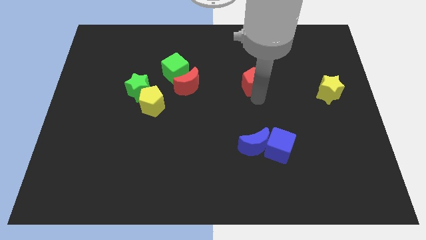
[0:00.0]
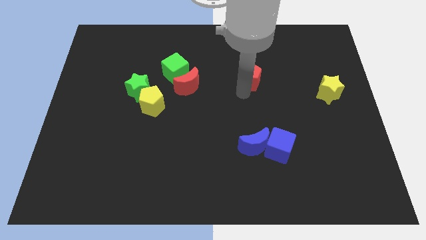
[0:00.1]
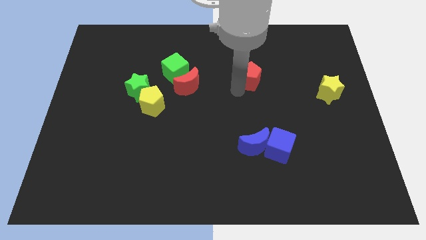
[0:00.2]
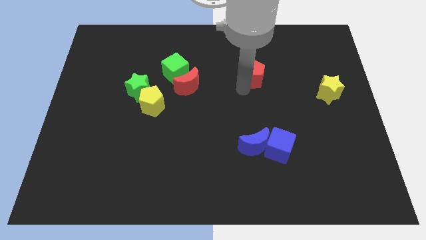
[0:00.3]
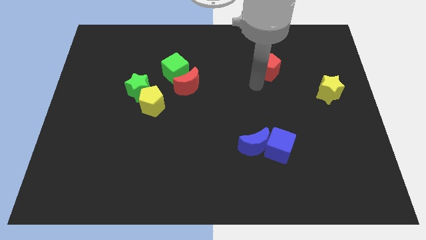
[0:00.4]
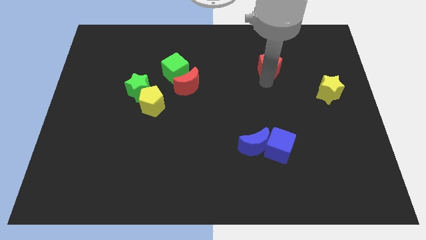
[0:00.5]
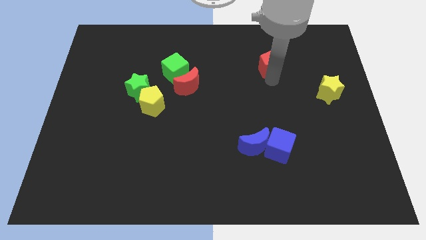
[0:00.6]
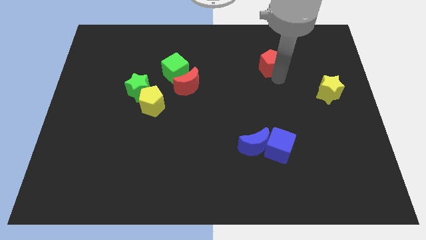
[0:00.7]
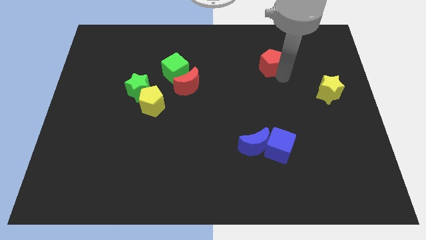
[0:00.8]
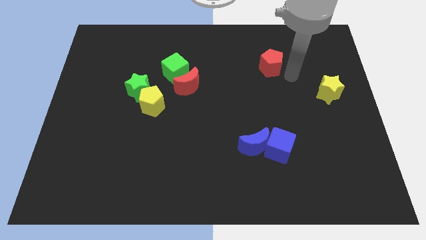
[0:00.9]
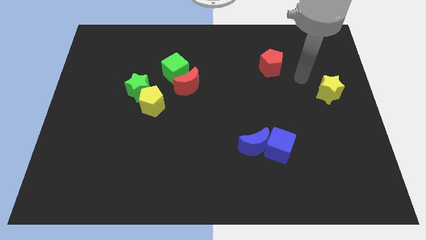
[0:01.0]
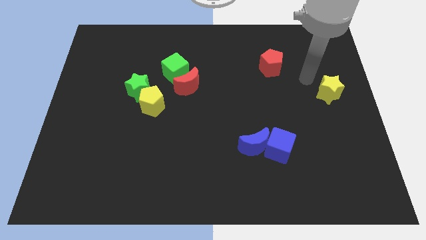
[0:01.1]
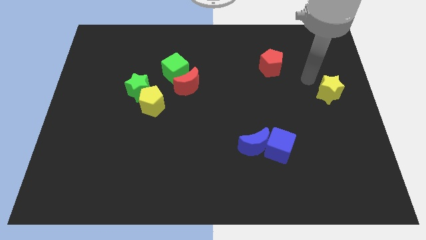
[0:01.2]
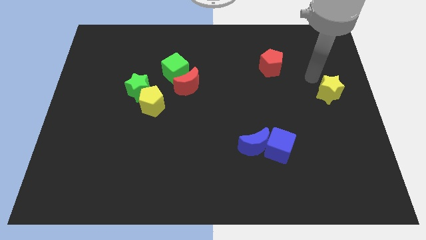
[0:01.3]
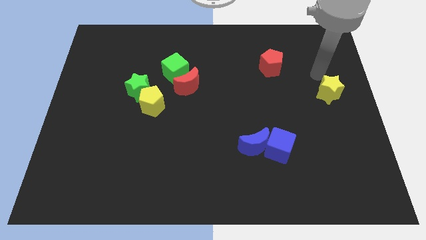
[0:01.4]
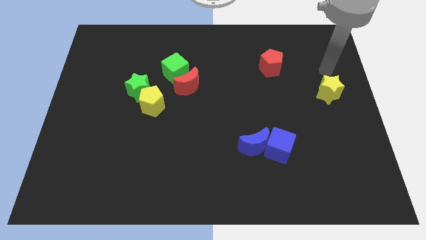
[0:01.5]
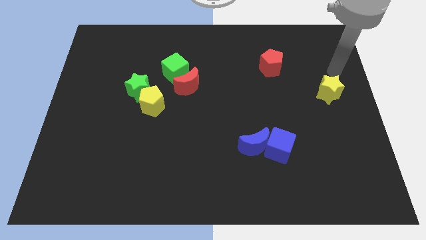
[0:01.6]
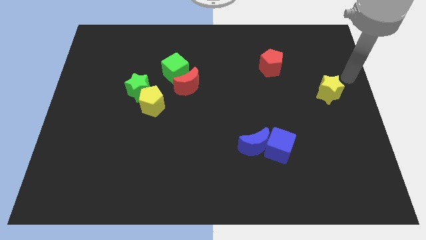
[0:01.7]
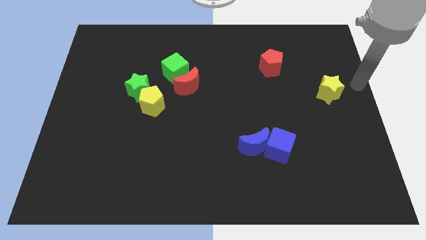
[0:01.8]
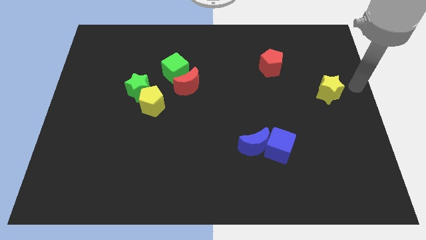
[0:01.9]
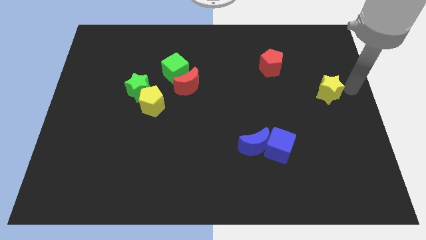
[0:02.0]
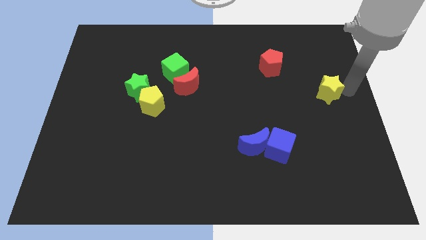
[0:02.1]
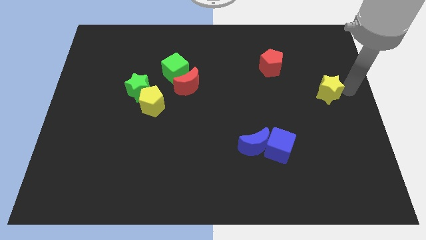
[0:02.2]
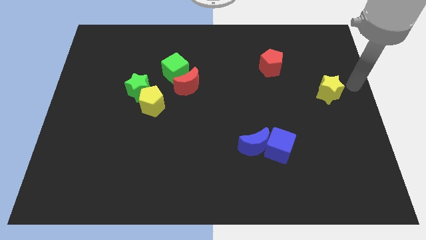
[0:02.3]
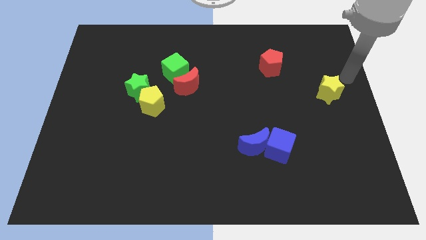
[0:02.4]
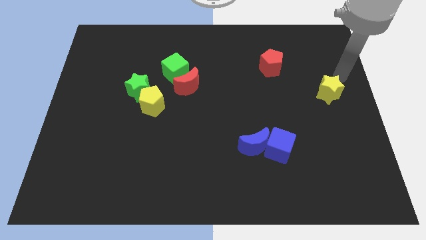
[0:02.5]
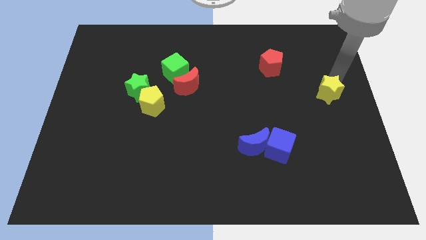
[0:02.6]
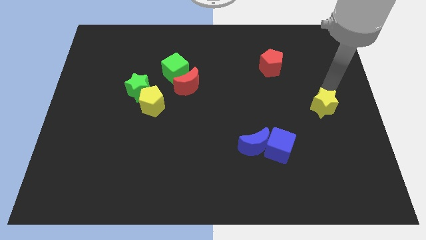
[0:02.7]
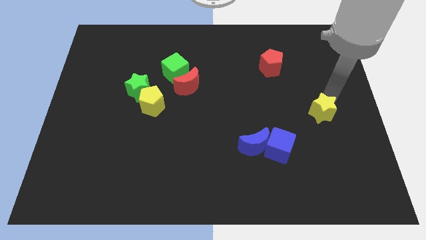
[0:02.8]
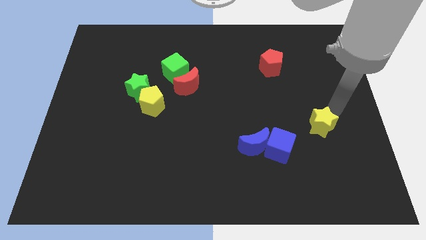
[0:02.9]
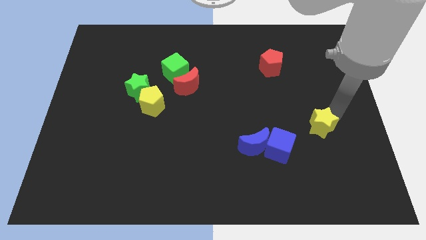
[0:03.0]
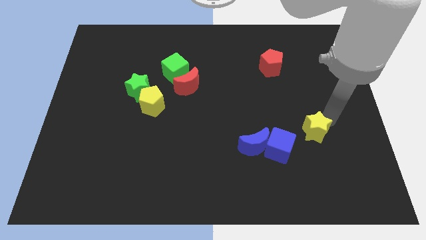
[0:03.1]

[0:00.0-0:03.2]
move the red pentagon towards the top of the board

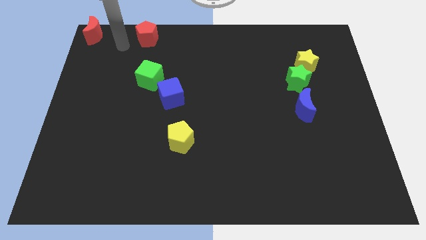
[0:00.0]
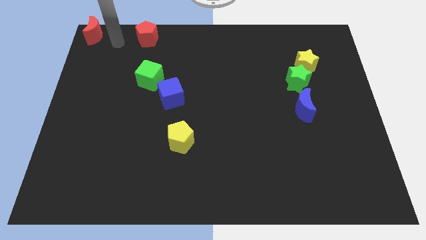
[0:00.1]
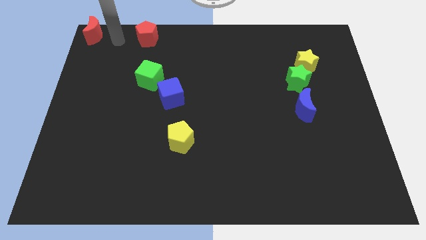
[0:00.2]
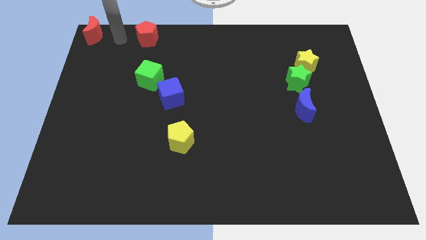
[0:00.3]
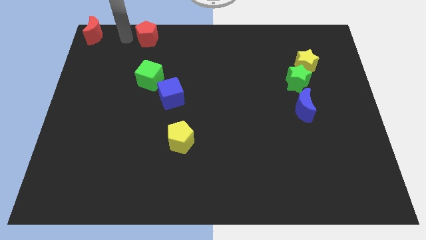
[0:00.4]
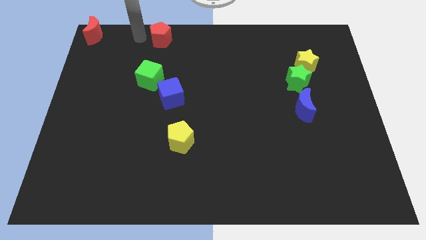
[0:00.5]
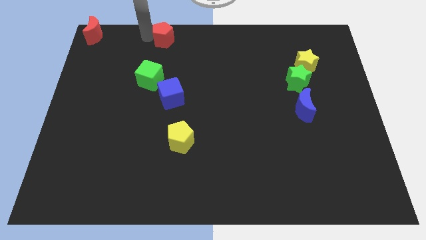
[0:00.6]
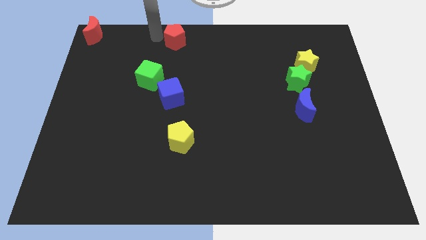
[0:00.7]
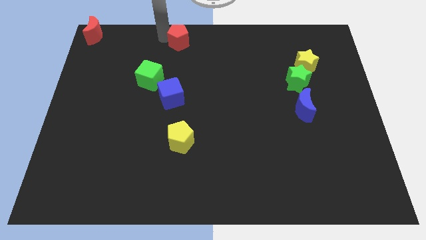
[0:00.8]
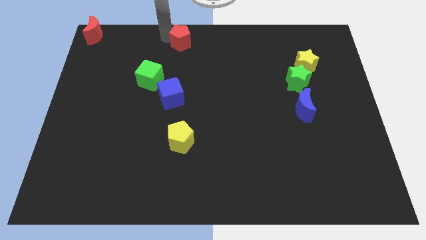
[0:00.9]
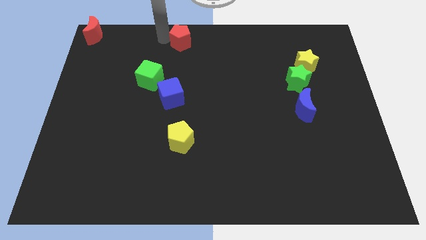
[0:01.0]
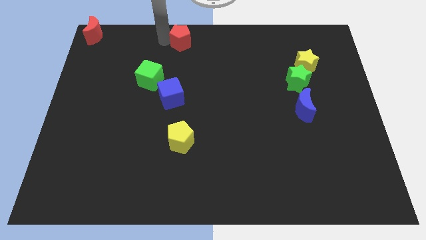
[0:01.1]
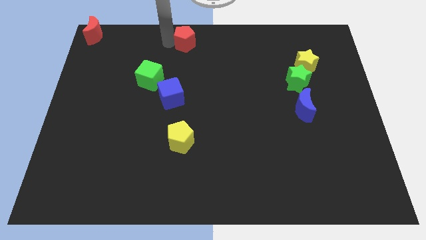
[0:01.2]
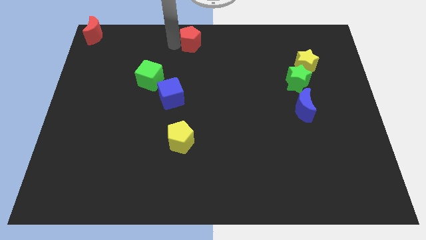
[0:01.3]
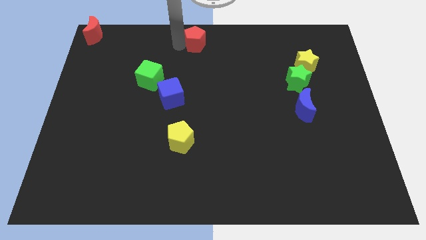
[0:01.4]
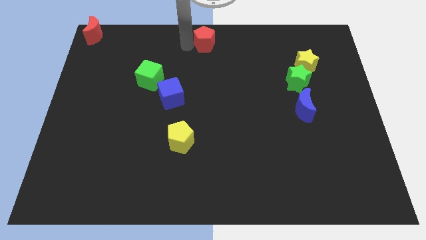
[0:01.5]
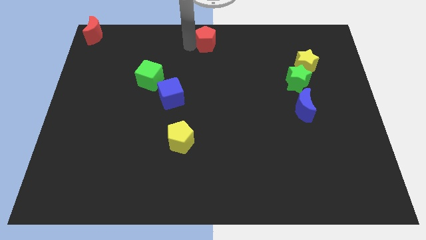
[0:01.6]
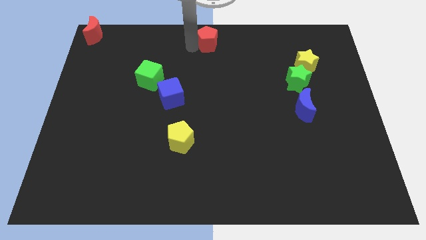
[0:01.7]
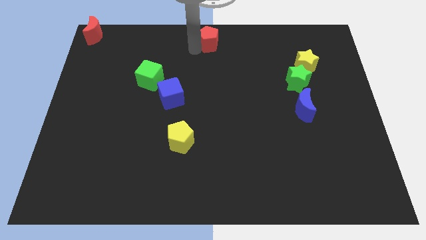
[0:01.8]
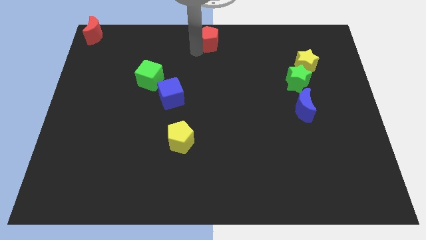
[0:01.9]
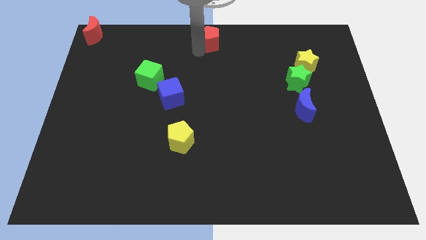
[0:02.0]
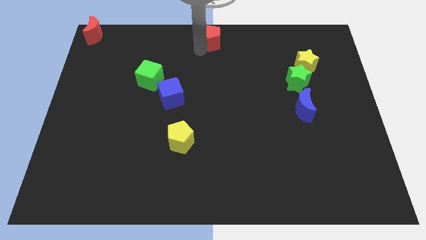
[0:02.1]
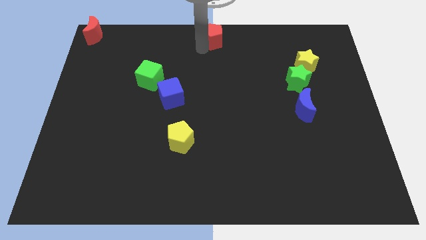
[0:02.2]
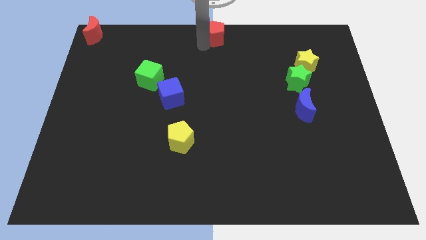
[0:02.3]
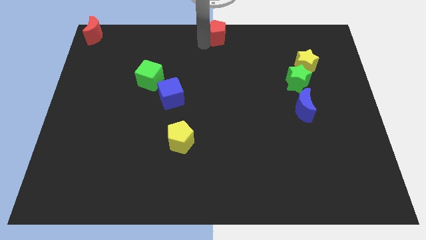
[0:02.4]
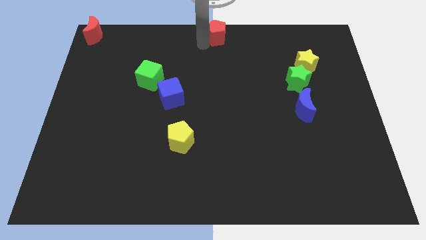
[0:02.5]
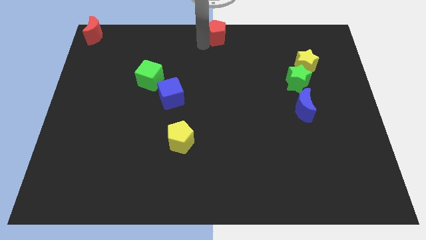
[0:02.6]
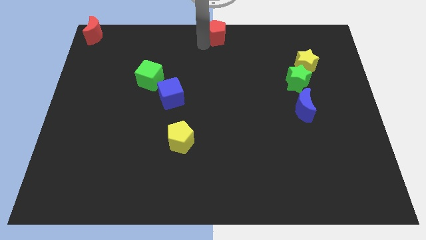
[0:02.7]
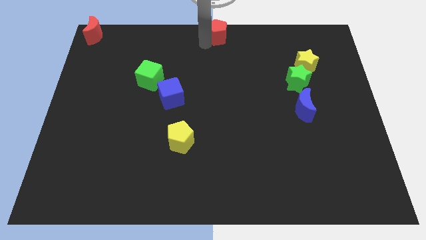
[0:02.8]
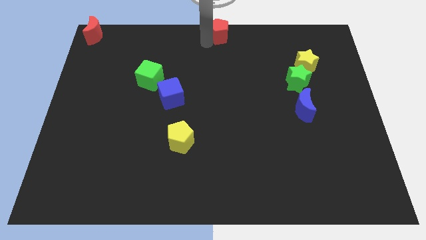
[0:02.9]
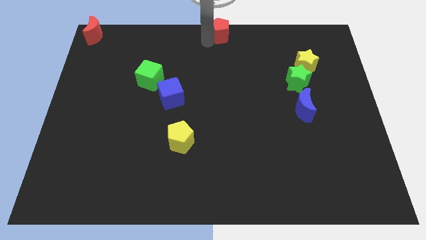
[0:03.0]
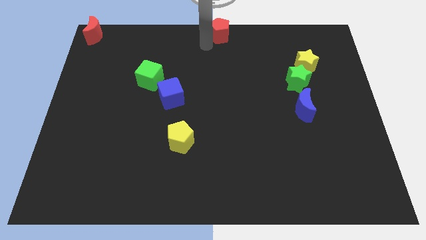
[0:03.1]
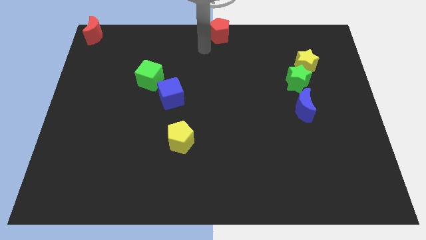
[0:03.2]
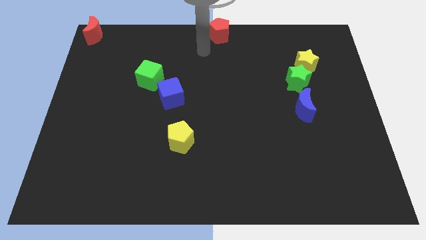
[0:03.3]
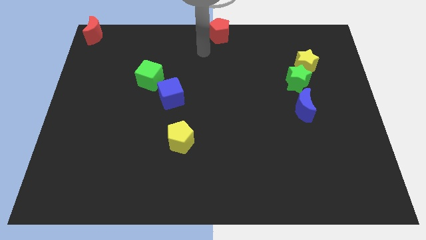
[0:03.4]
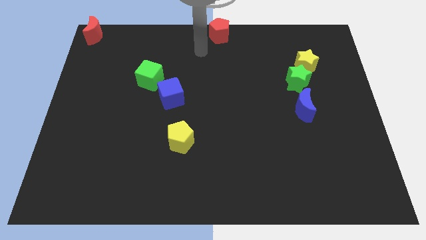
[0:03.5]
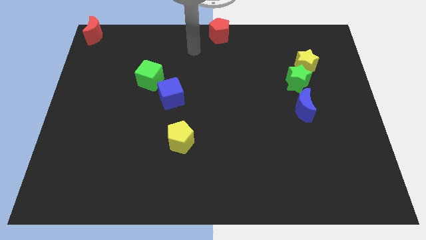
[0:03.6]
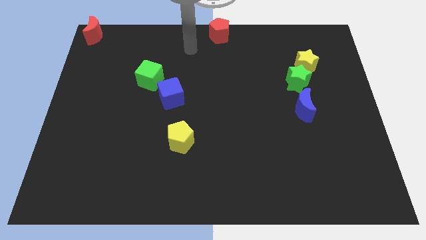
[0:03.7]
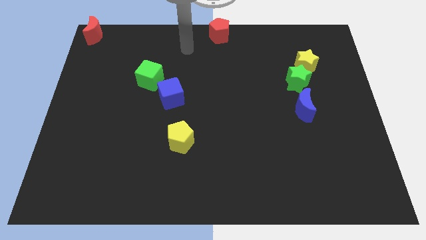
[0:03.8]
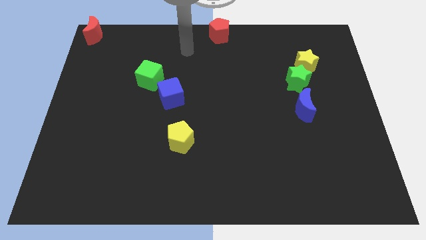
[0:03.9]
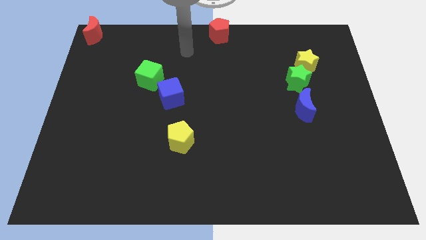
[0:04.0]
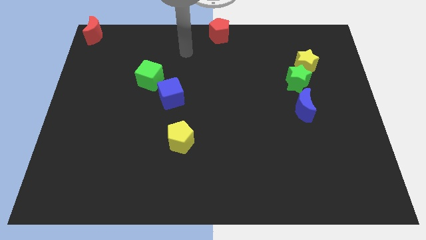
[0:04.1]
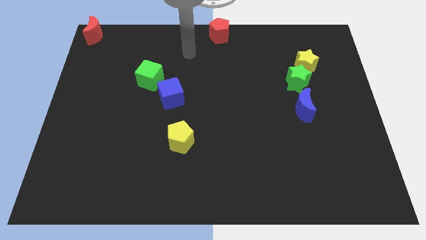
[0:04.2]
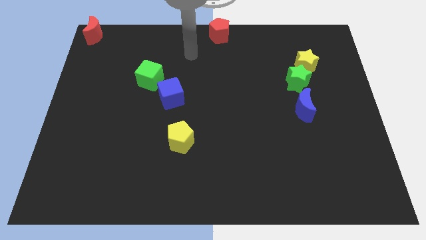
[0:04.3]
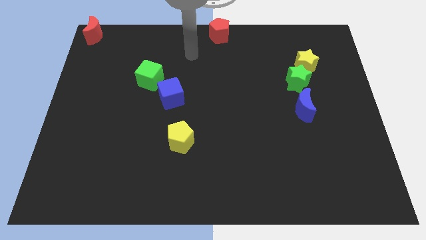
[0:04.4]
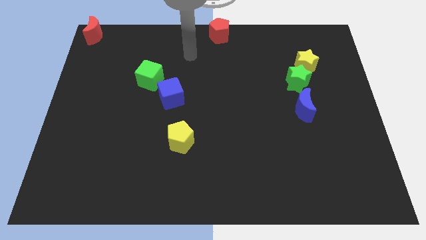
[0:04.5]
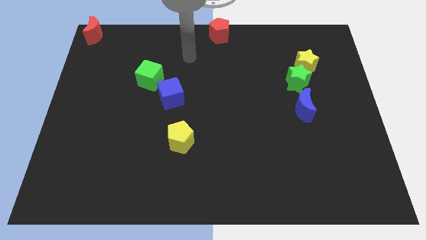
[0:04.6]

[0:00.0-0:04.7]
place the red pentagon towards the top center of the board

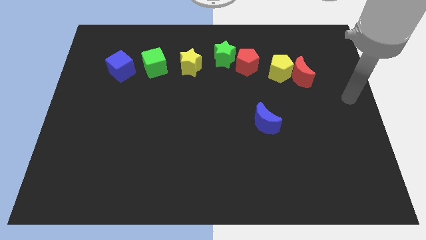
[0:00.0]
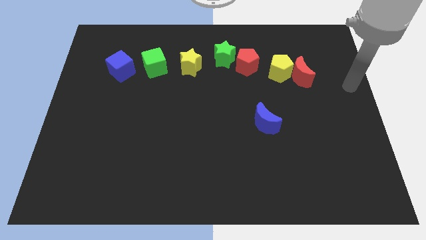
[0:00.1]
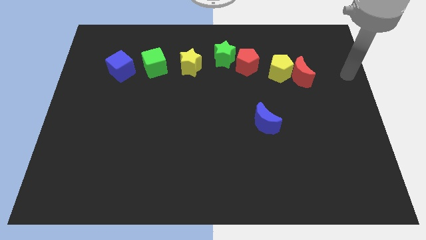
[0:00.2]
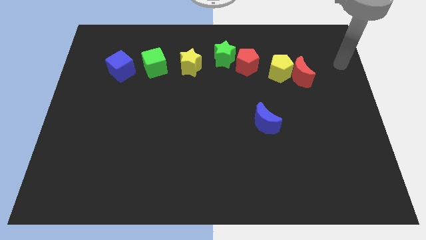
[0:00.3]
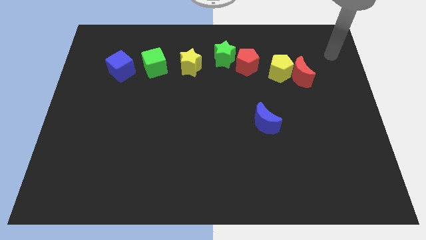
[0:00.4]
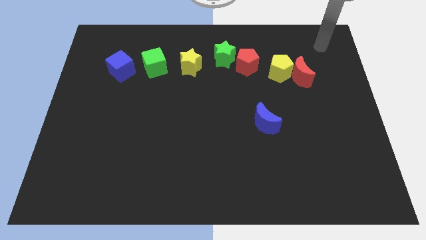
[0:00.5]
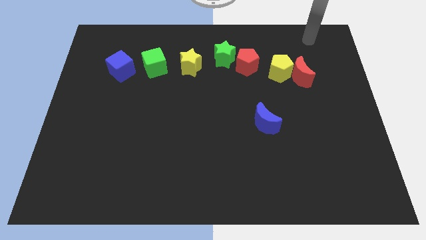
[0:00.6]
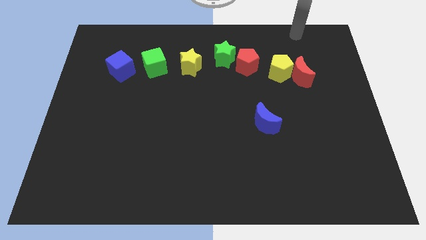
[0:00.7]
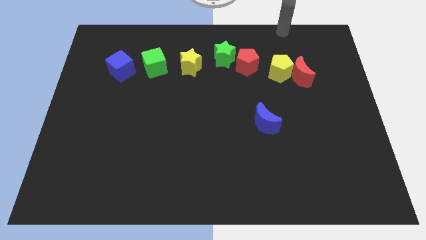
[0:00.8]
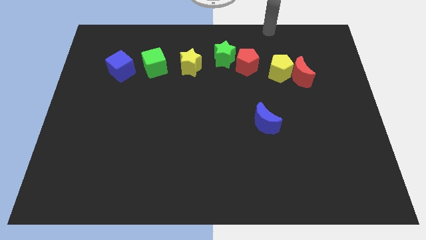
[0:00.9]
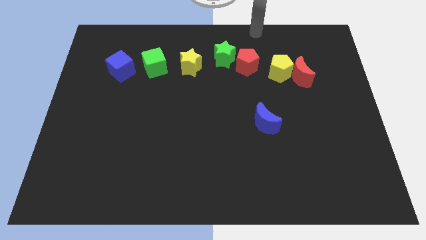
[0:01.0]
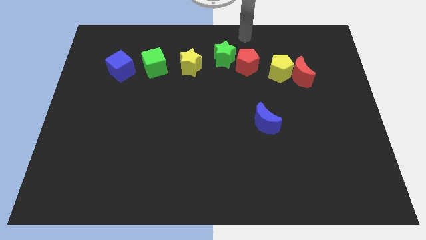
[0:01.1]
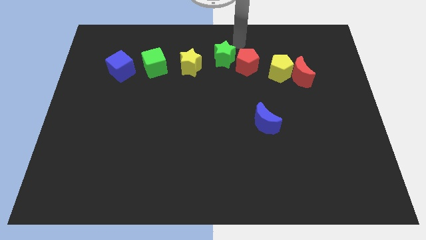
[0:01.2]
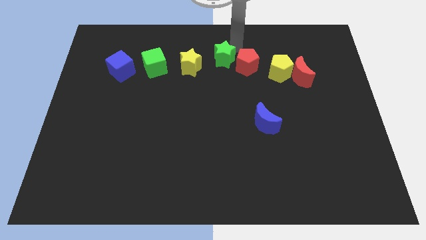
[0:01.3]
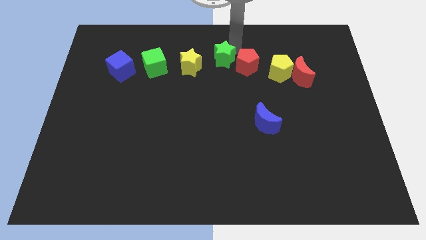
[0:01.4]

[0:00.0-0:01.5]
move the arm towards the green star
